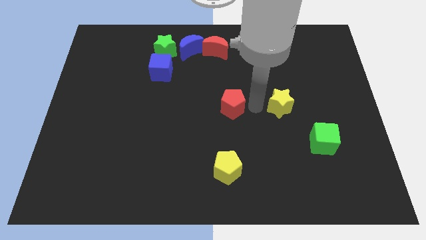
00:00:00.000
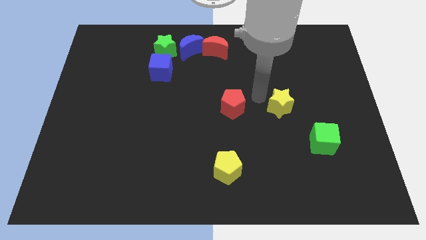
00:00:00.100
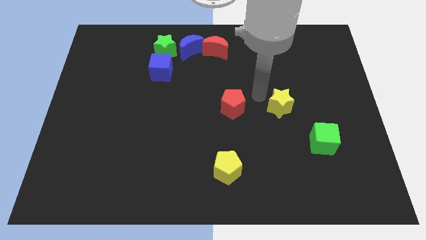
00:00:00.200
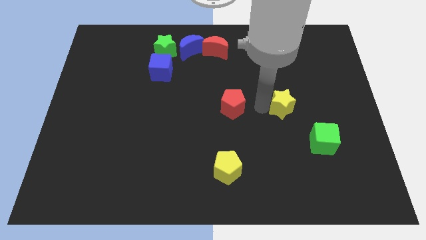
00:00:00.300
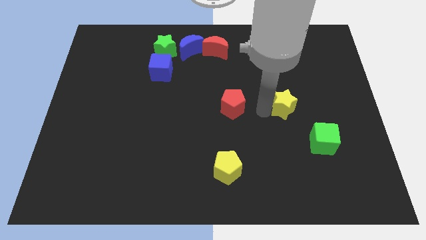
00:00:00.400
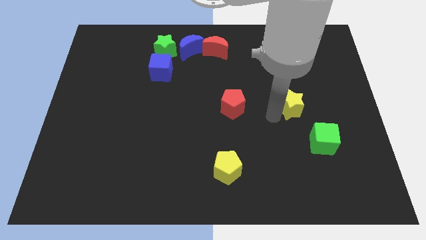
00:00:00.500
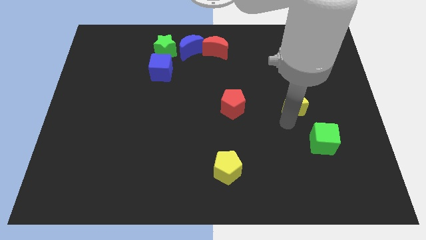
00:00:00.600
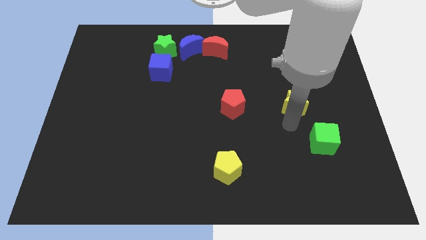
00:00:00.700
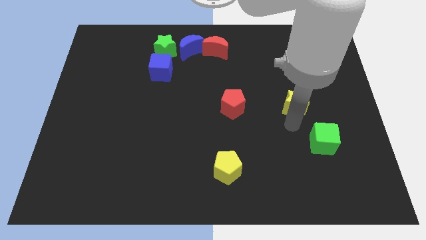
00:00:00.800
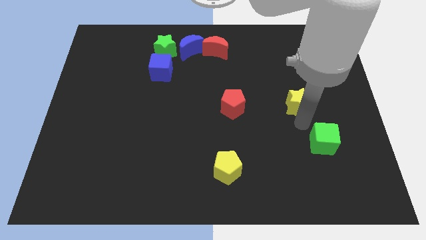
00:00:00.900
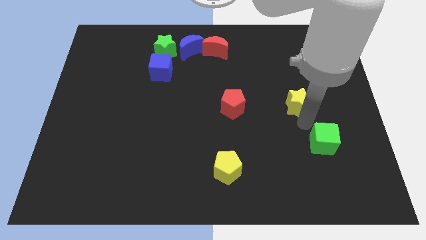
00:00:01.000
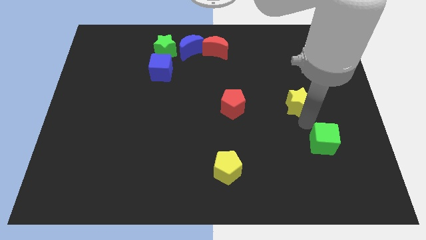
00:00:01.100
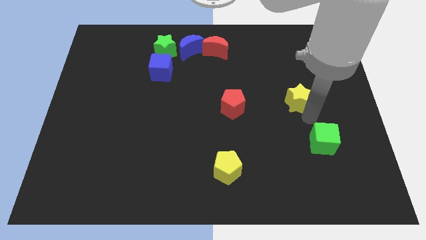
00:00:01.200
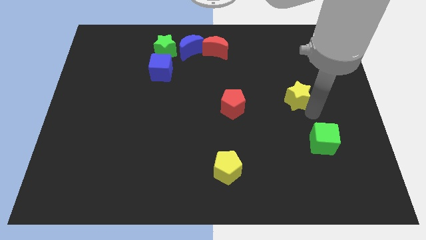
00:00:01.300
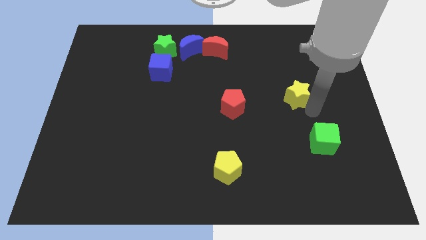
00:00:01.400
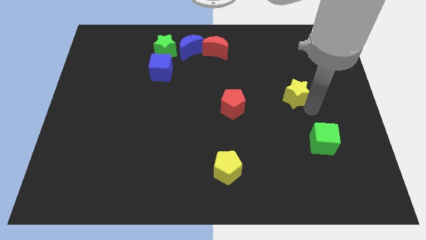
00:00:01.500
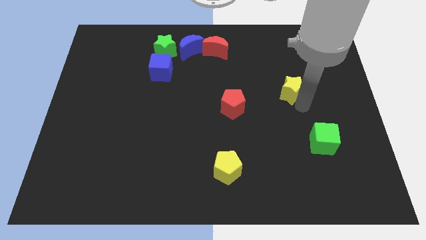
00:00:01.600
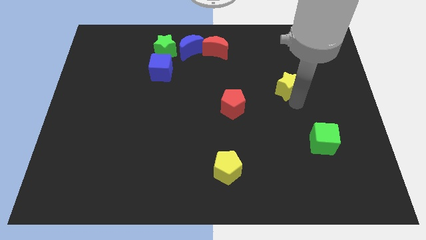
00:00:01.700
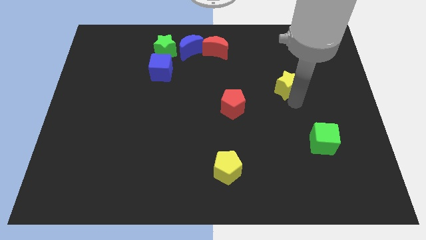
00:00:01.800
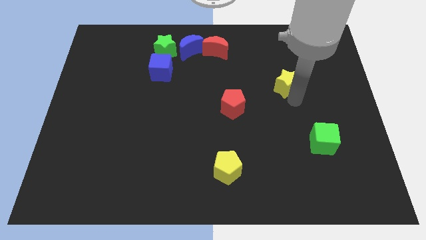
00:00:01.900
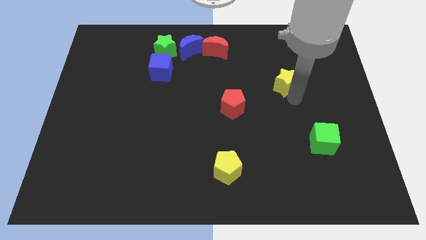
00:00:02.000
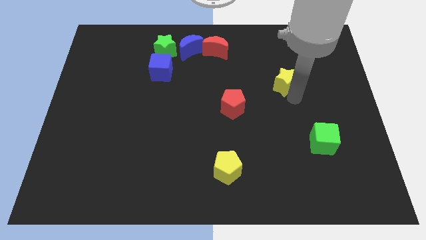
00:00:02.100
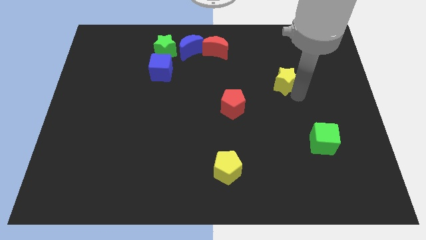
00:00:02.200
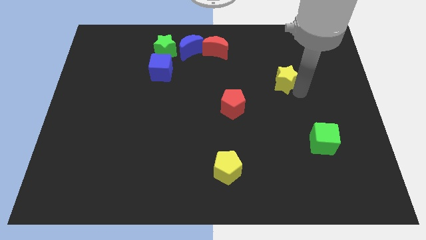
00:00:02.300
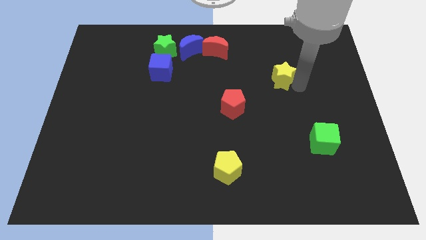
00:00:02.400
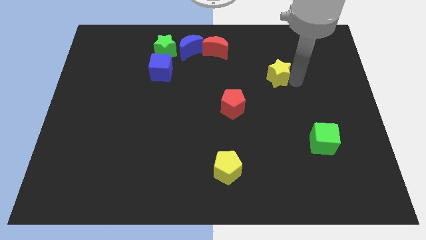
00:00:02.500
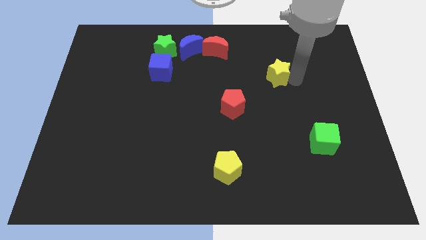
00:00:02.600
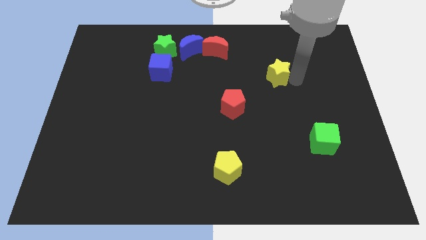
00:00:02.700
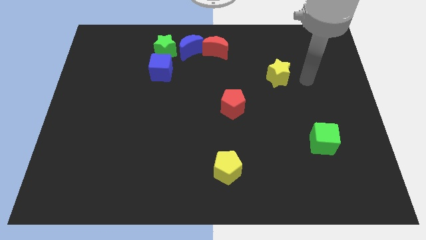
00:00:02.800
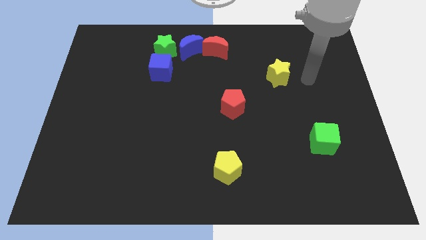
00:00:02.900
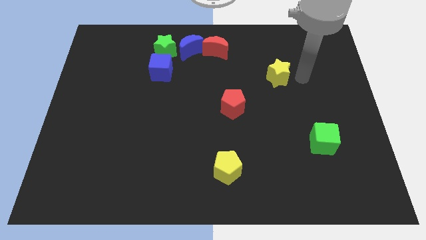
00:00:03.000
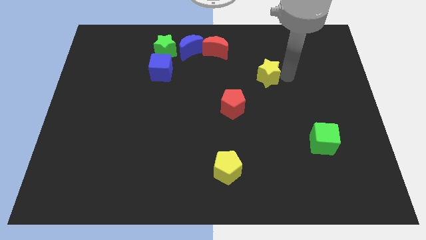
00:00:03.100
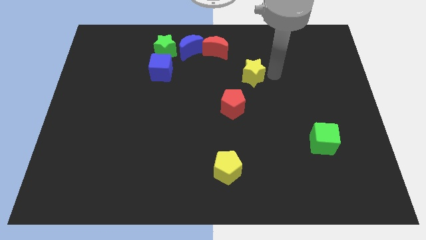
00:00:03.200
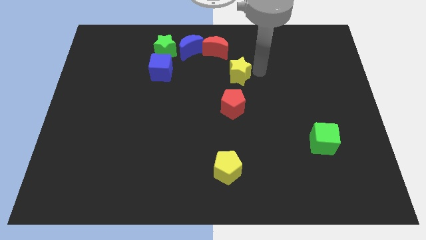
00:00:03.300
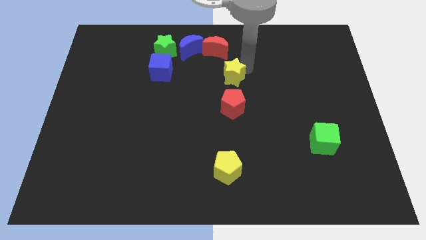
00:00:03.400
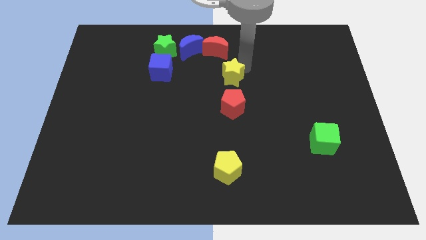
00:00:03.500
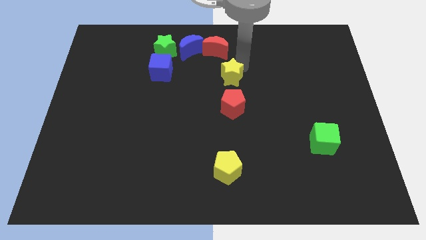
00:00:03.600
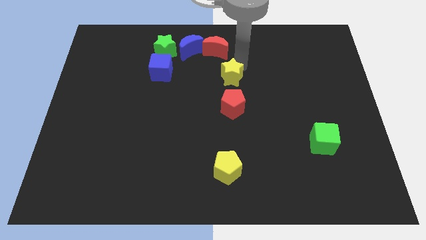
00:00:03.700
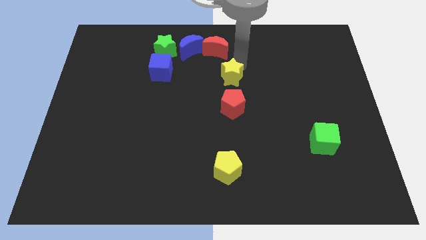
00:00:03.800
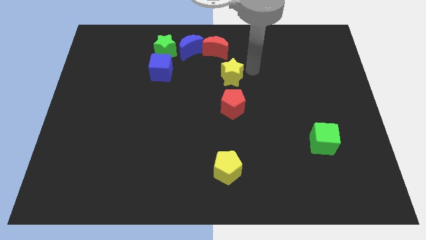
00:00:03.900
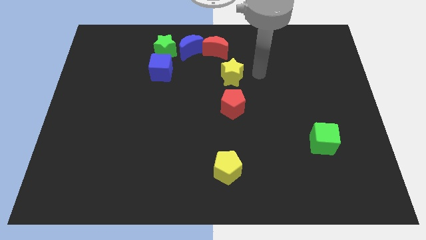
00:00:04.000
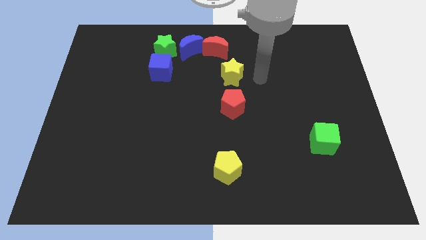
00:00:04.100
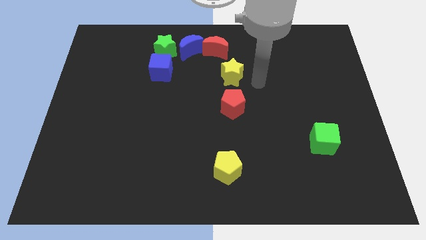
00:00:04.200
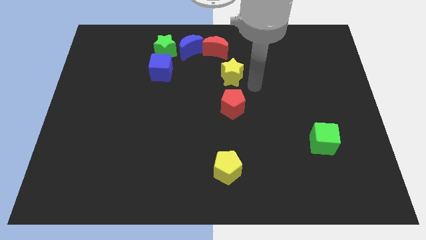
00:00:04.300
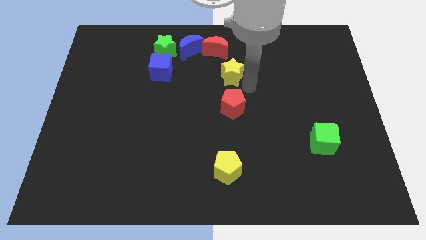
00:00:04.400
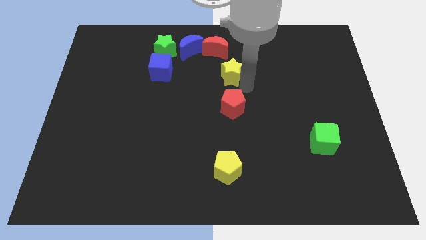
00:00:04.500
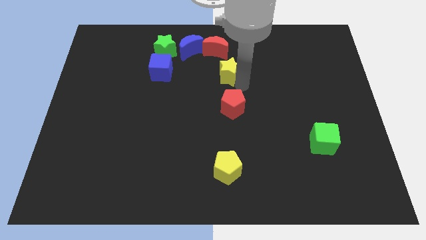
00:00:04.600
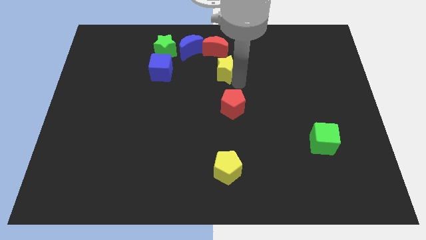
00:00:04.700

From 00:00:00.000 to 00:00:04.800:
move yellow star towards top side of the board

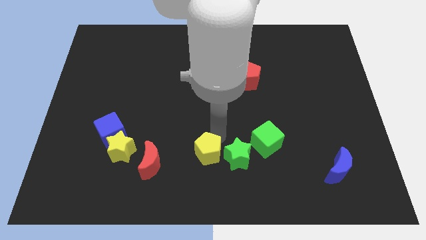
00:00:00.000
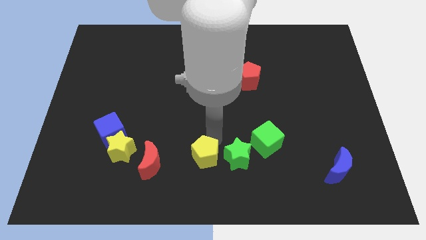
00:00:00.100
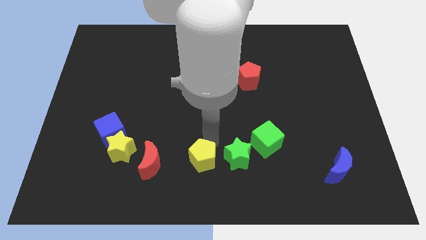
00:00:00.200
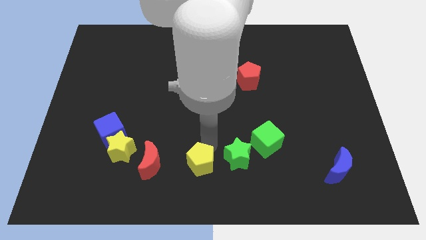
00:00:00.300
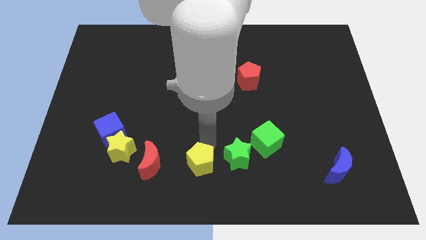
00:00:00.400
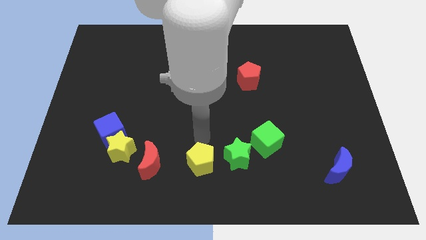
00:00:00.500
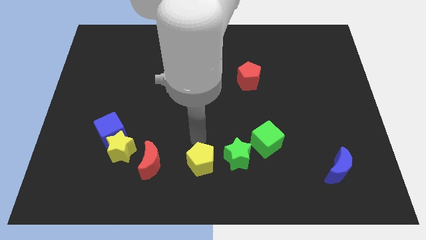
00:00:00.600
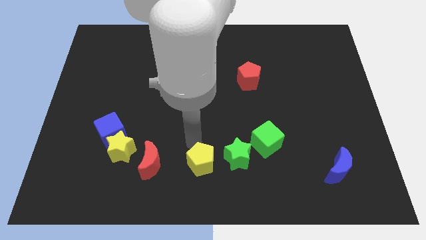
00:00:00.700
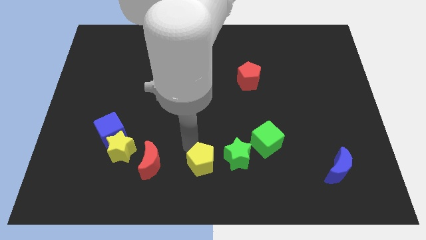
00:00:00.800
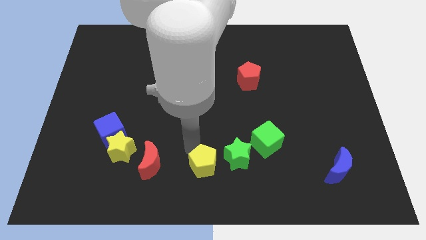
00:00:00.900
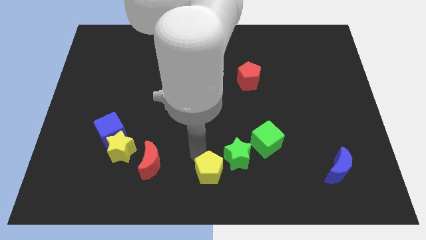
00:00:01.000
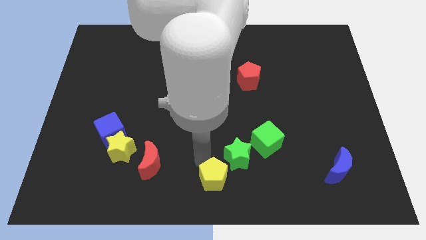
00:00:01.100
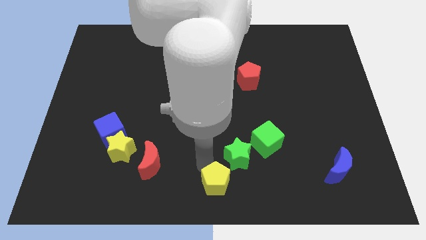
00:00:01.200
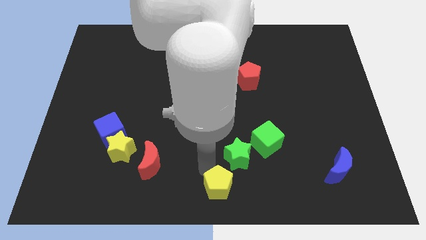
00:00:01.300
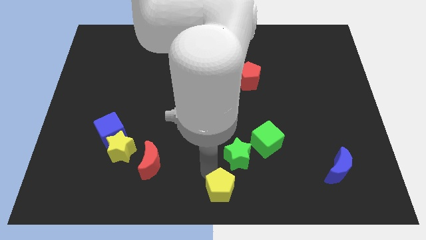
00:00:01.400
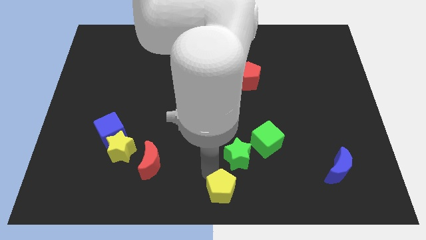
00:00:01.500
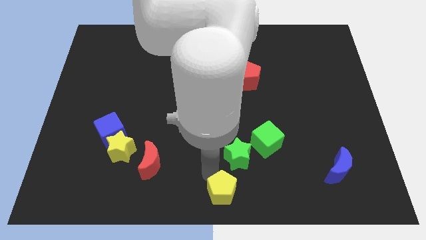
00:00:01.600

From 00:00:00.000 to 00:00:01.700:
separate yellow pentagon from green star

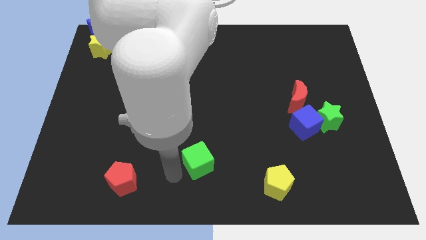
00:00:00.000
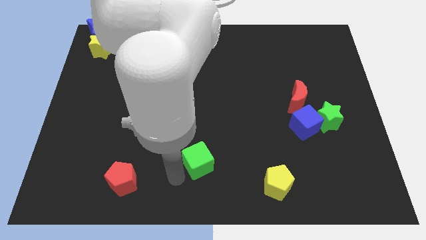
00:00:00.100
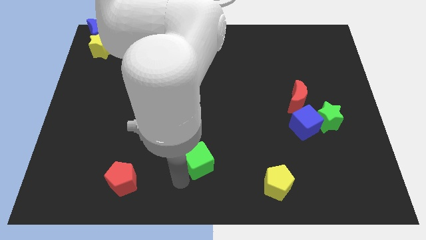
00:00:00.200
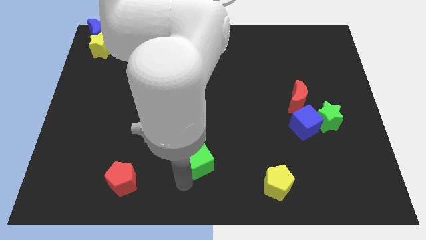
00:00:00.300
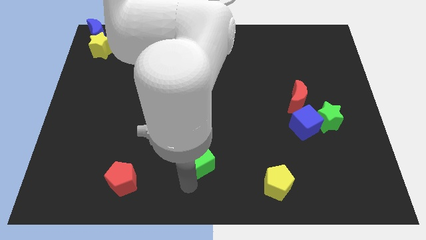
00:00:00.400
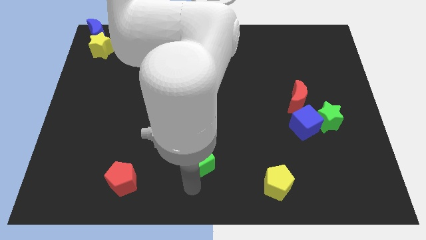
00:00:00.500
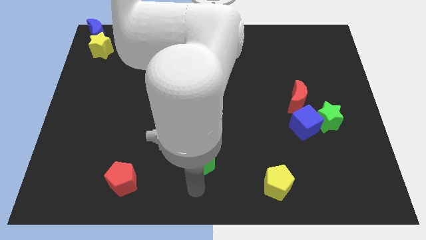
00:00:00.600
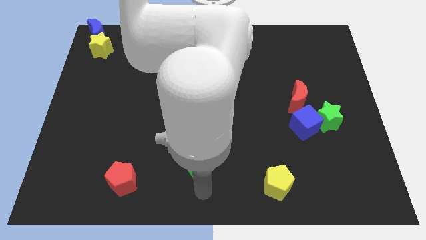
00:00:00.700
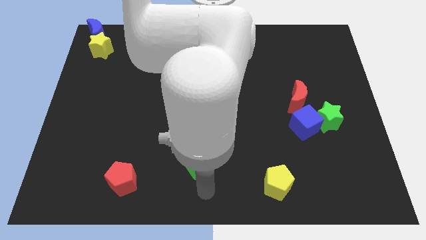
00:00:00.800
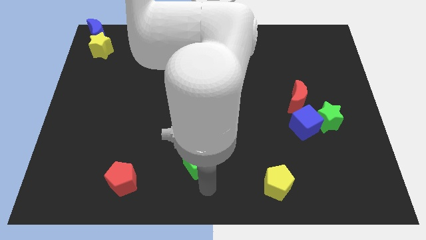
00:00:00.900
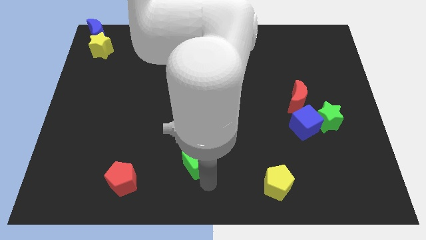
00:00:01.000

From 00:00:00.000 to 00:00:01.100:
place the arm at the bottom right side of green cube

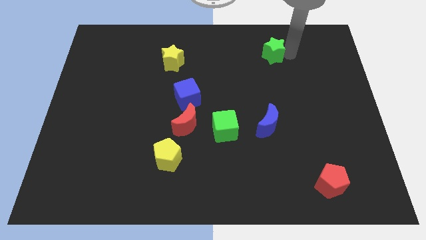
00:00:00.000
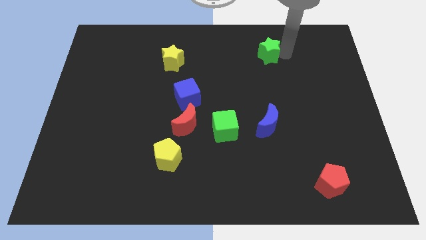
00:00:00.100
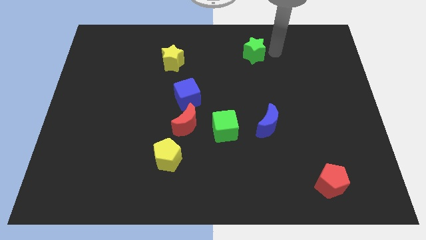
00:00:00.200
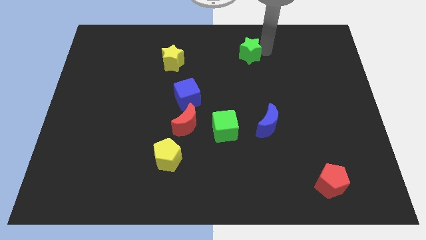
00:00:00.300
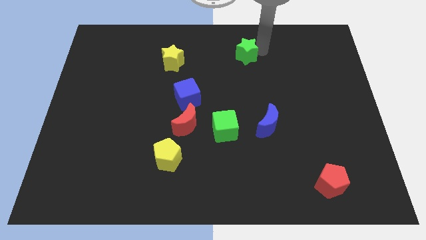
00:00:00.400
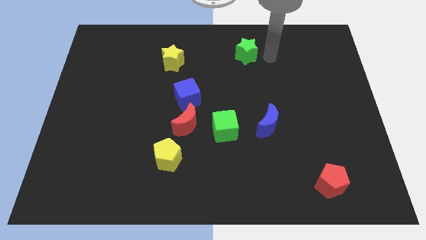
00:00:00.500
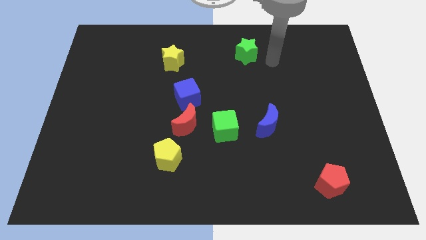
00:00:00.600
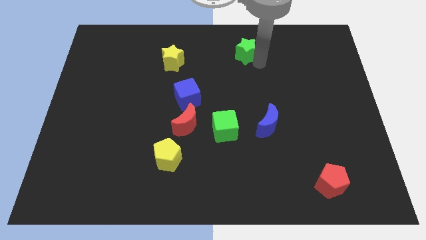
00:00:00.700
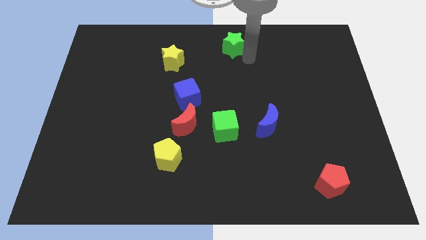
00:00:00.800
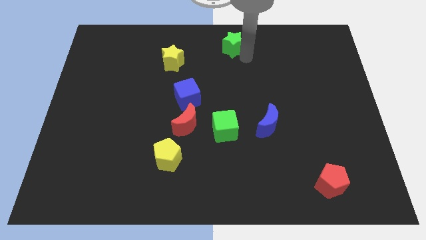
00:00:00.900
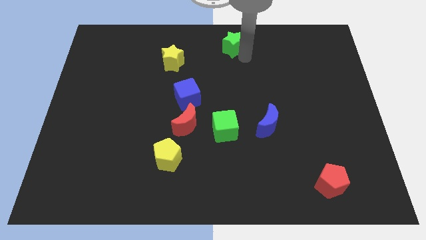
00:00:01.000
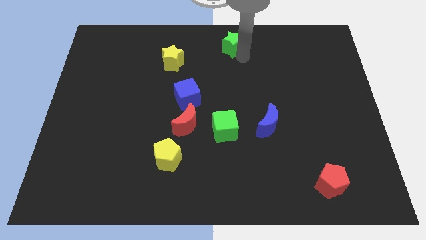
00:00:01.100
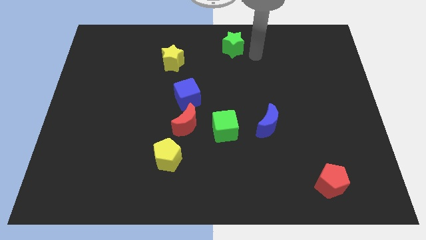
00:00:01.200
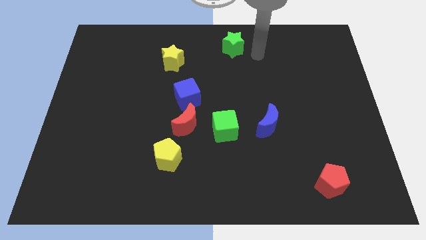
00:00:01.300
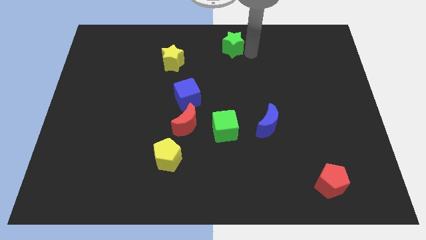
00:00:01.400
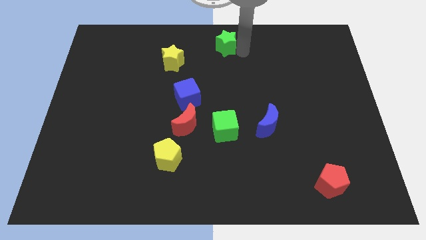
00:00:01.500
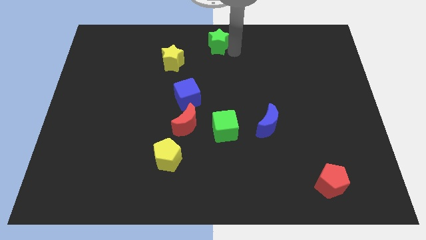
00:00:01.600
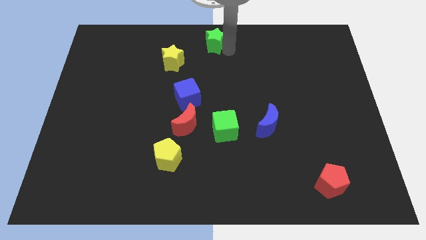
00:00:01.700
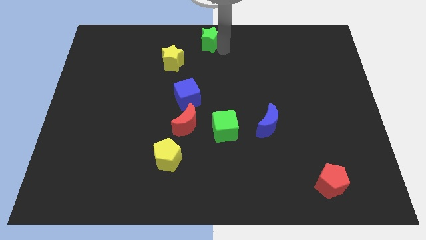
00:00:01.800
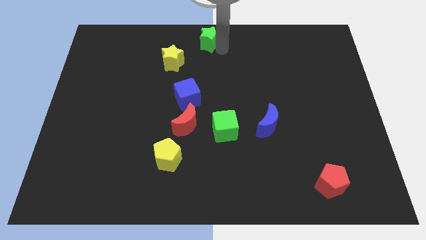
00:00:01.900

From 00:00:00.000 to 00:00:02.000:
push the green star to the top center of the board
